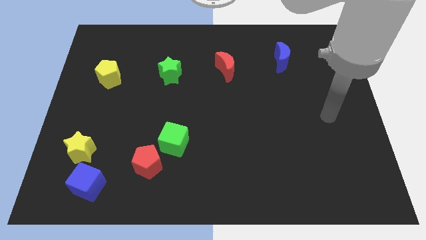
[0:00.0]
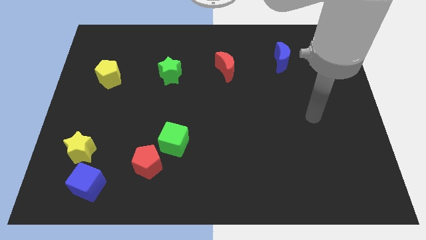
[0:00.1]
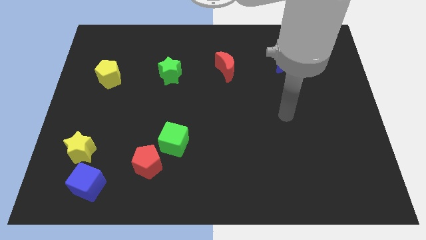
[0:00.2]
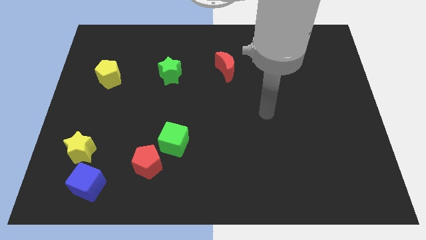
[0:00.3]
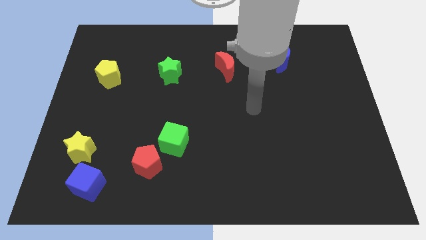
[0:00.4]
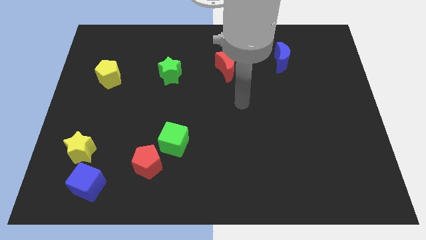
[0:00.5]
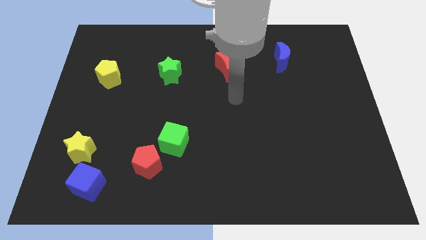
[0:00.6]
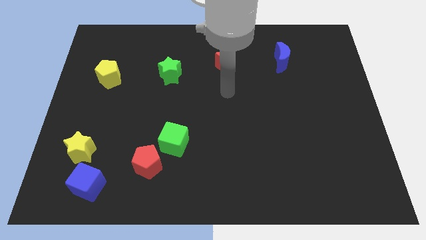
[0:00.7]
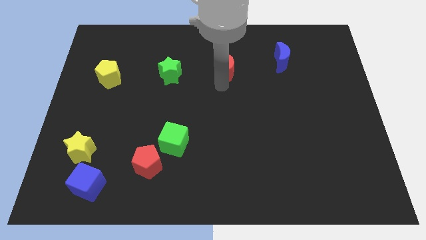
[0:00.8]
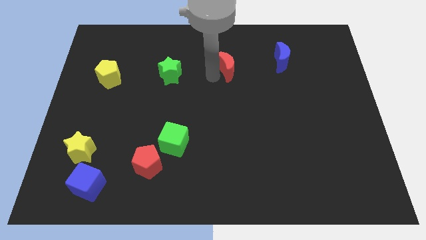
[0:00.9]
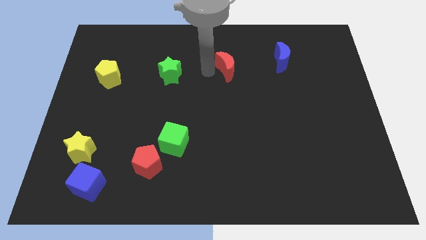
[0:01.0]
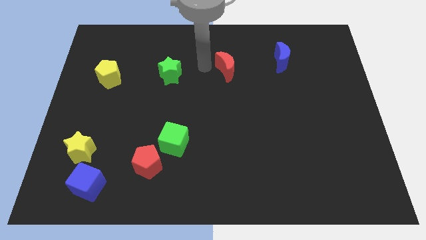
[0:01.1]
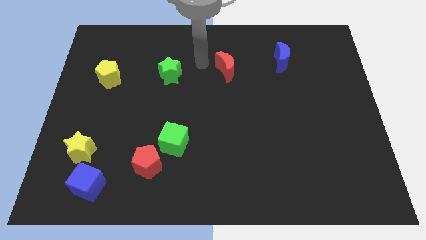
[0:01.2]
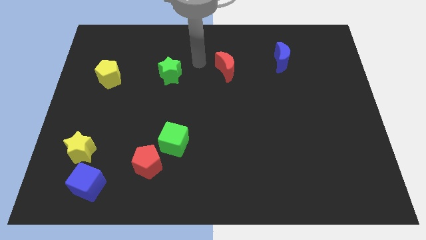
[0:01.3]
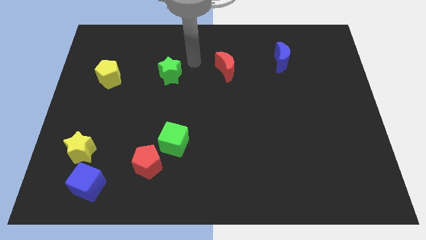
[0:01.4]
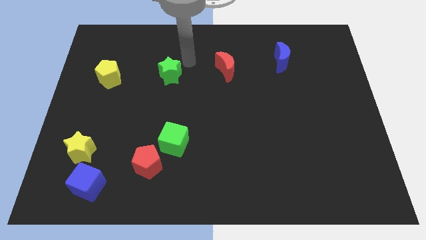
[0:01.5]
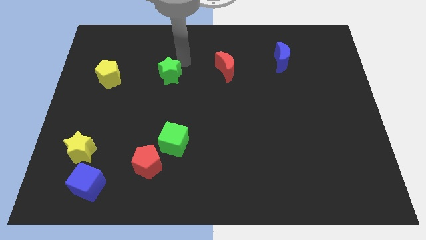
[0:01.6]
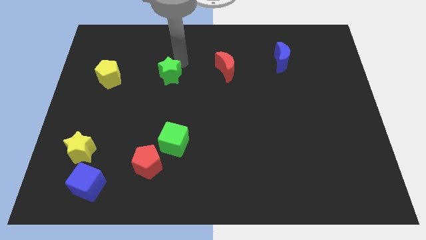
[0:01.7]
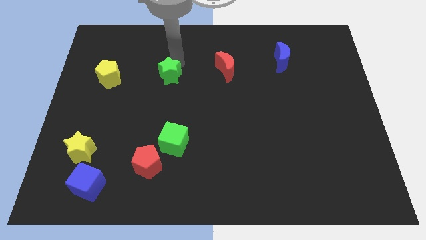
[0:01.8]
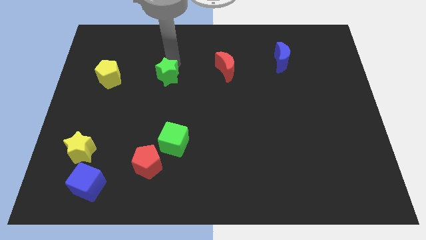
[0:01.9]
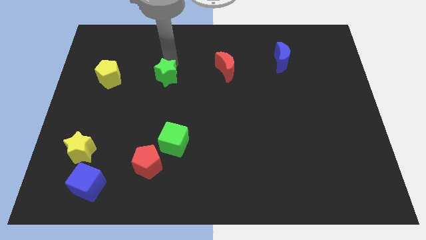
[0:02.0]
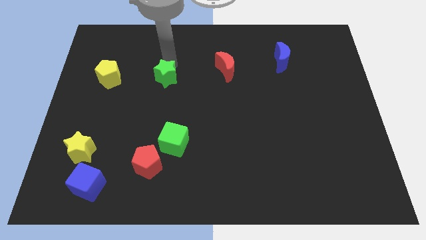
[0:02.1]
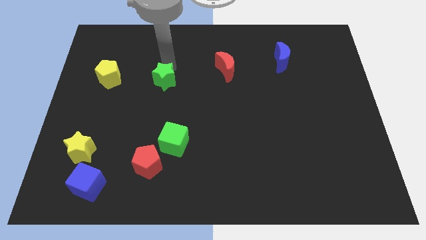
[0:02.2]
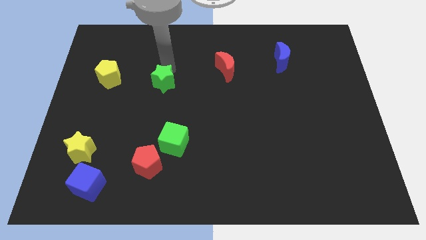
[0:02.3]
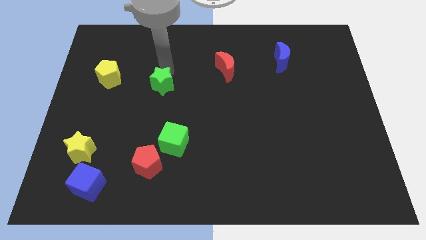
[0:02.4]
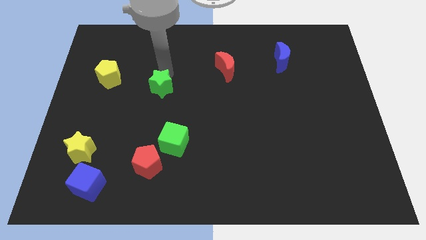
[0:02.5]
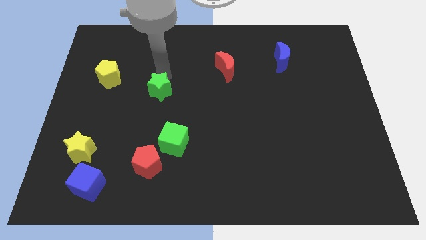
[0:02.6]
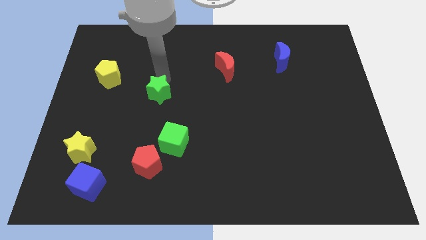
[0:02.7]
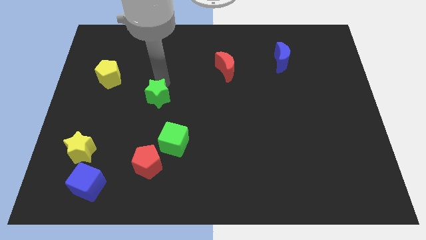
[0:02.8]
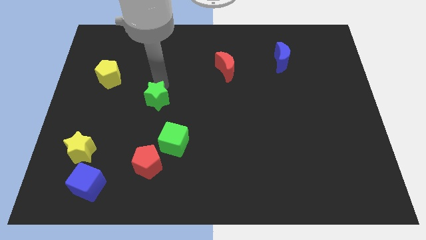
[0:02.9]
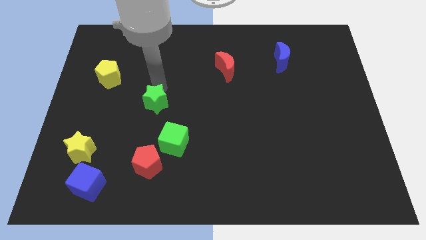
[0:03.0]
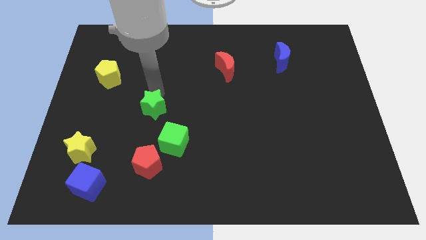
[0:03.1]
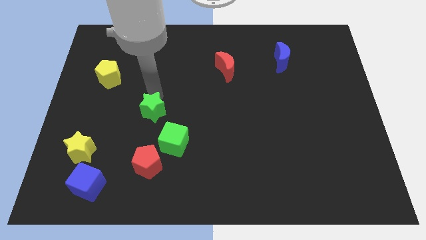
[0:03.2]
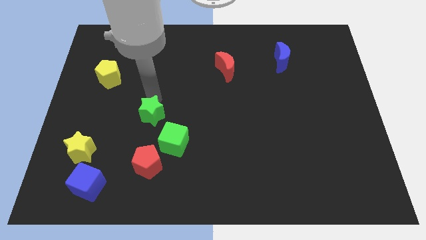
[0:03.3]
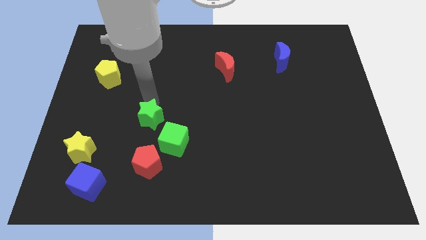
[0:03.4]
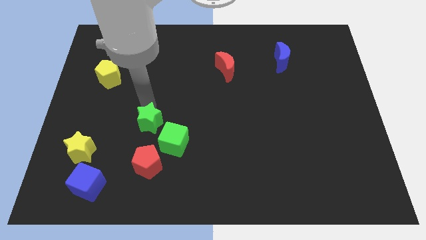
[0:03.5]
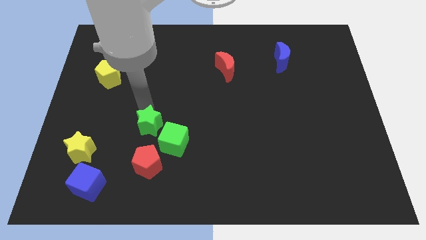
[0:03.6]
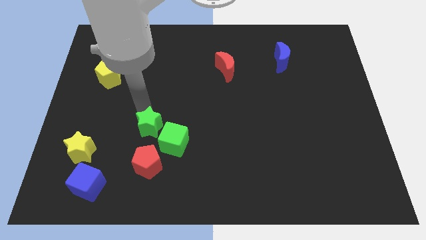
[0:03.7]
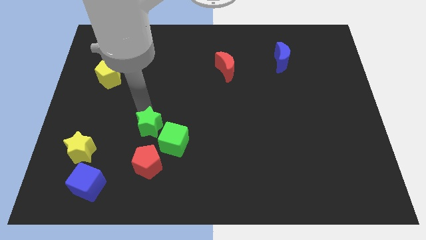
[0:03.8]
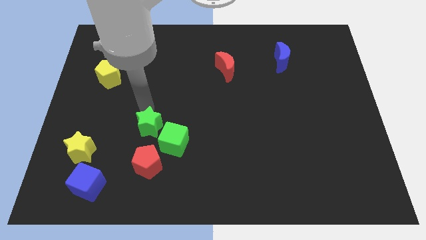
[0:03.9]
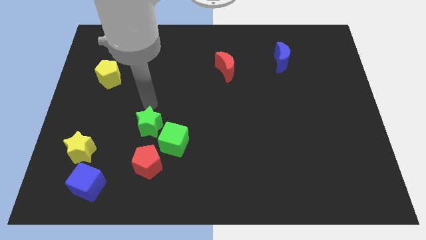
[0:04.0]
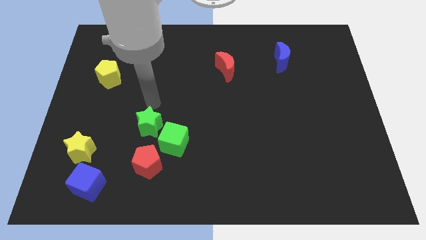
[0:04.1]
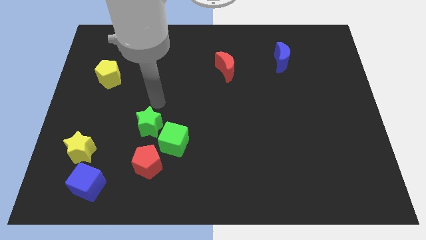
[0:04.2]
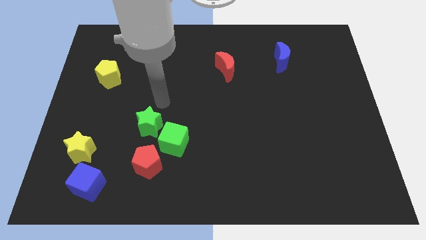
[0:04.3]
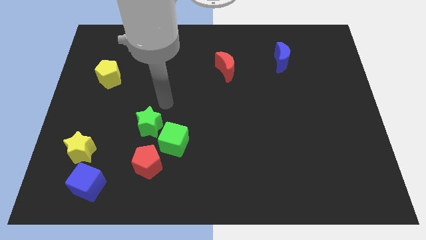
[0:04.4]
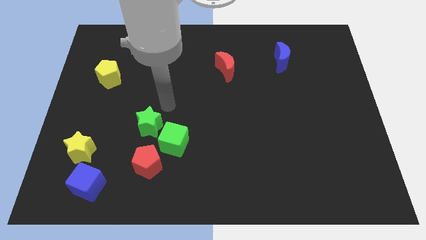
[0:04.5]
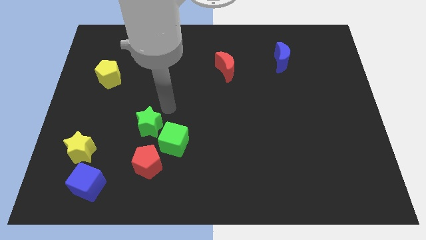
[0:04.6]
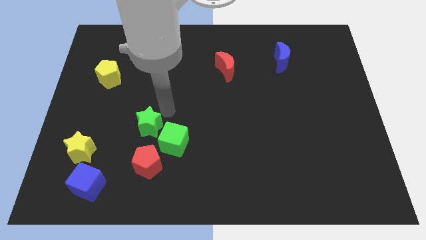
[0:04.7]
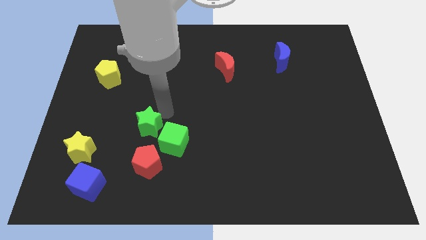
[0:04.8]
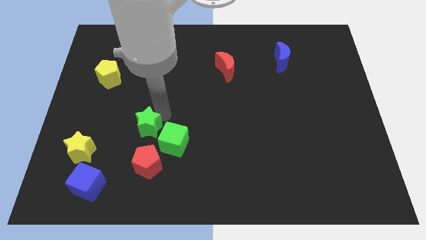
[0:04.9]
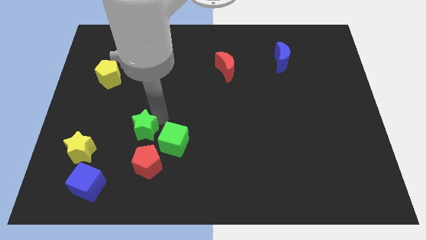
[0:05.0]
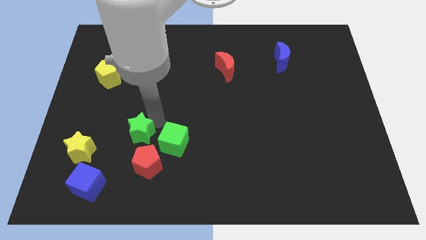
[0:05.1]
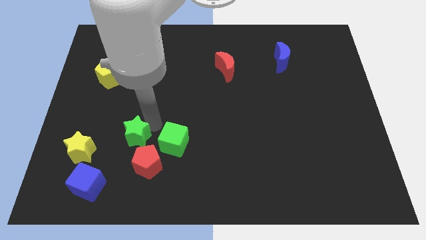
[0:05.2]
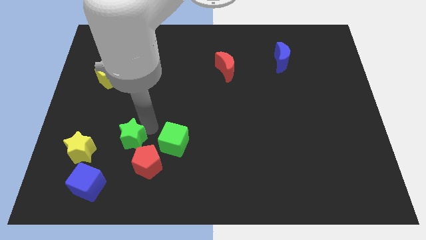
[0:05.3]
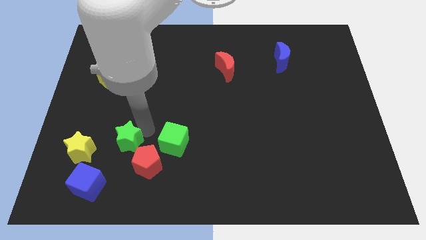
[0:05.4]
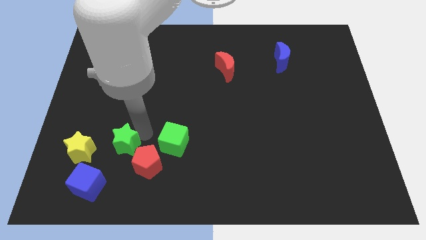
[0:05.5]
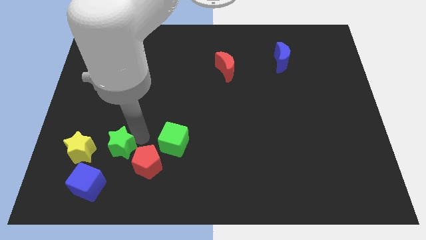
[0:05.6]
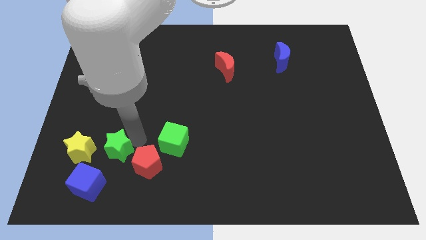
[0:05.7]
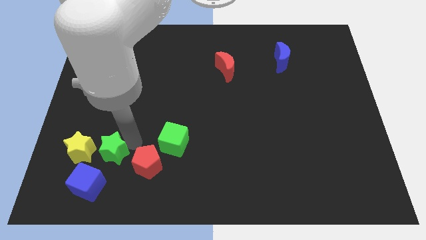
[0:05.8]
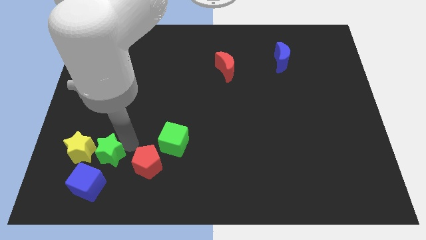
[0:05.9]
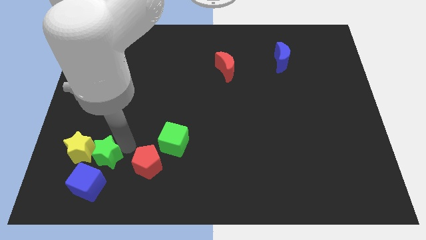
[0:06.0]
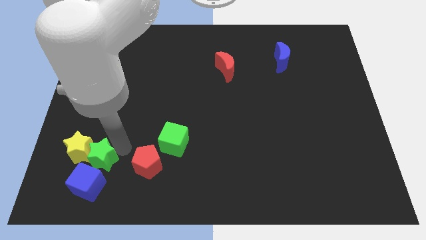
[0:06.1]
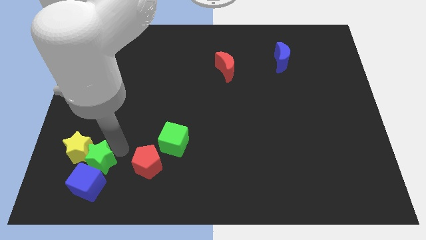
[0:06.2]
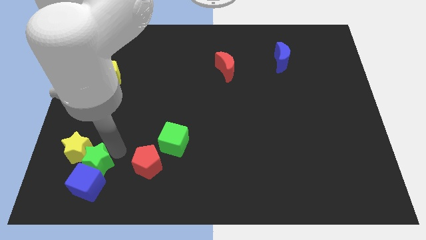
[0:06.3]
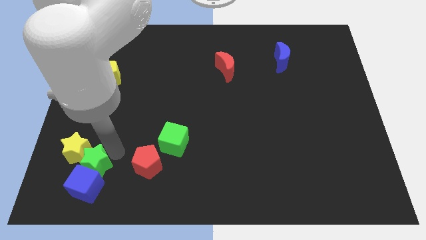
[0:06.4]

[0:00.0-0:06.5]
put the green star towards the blue cube

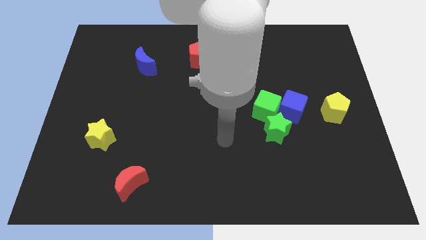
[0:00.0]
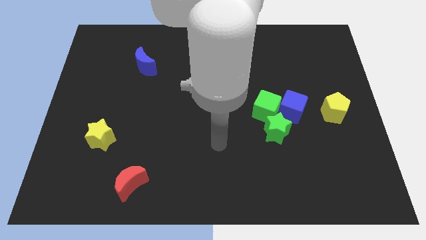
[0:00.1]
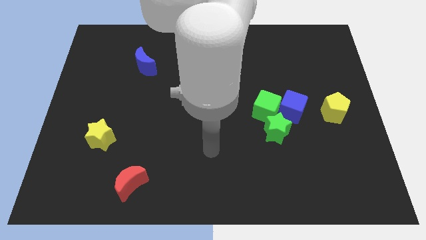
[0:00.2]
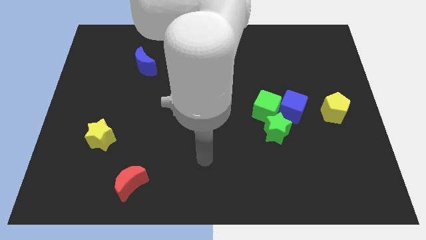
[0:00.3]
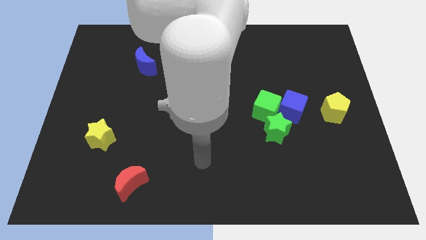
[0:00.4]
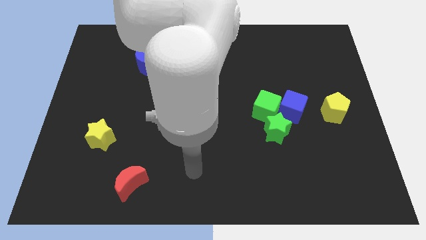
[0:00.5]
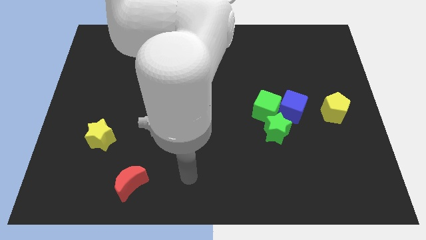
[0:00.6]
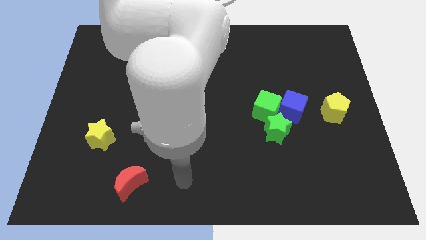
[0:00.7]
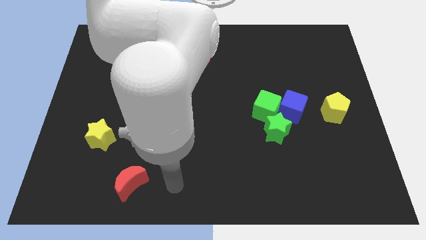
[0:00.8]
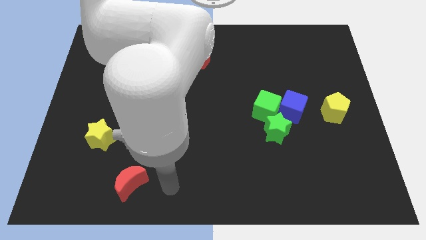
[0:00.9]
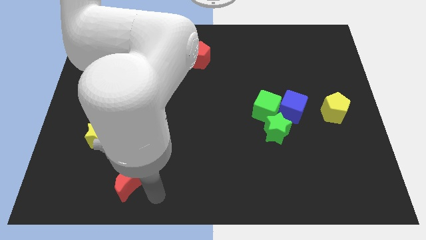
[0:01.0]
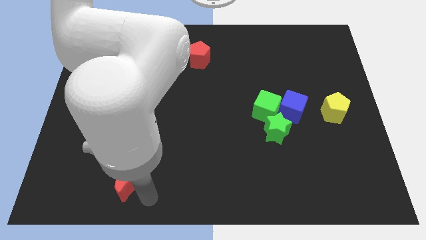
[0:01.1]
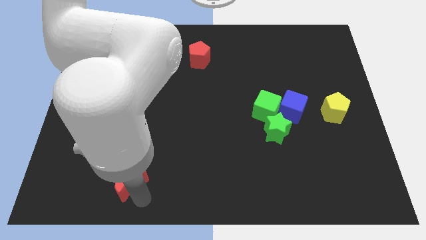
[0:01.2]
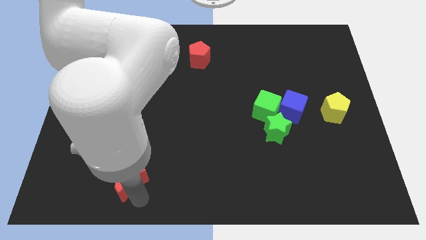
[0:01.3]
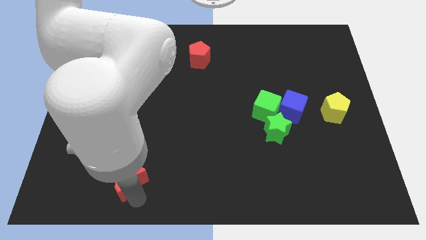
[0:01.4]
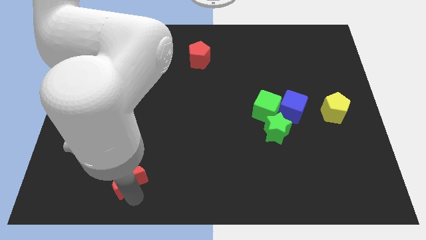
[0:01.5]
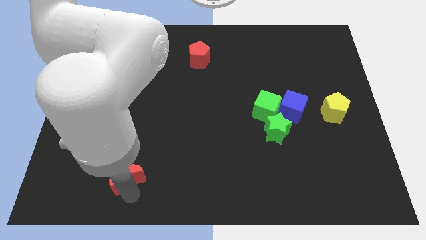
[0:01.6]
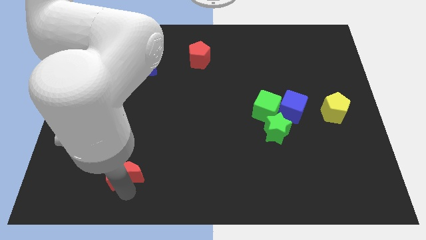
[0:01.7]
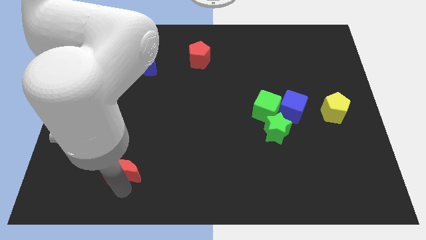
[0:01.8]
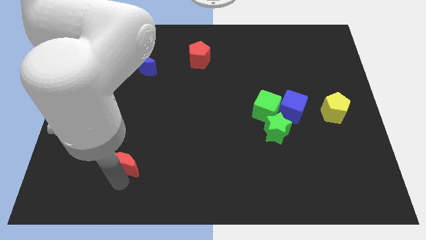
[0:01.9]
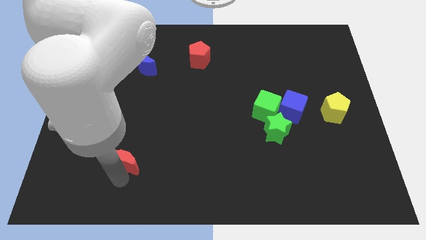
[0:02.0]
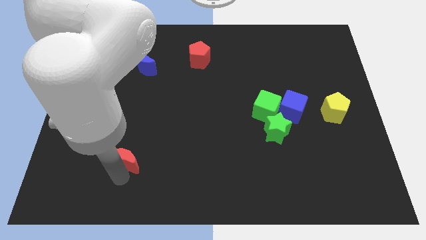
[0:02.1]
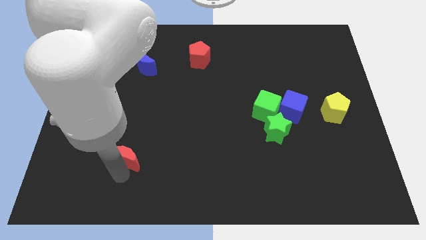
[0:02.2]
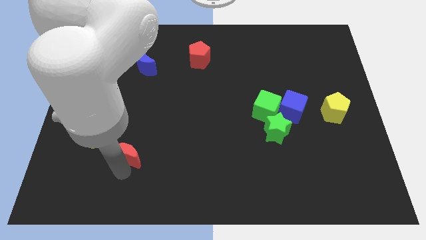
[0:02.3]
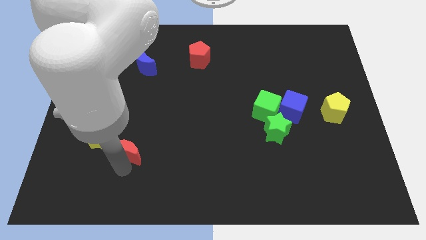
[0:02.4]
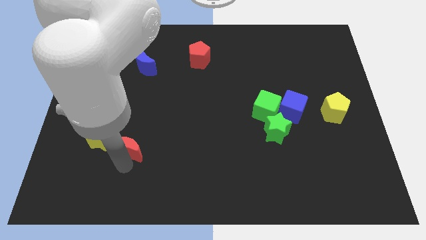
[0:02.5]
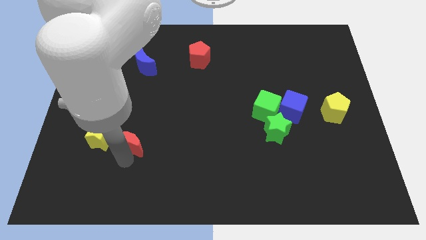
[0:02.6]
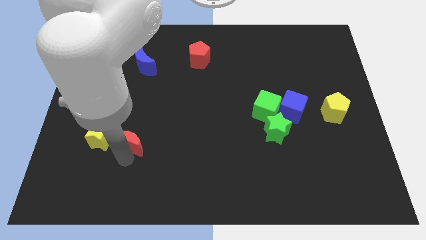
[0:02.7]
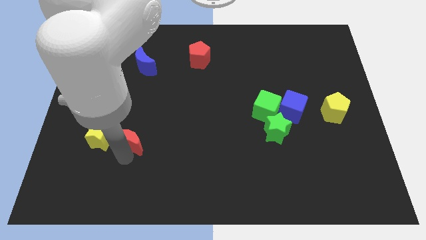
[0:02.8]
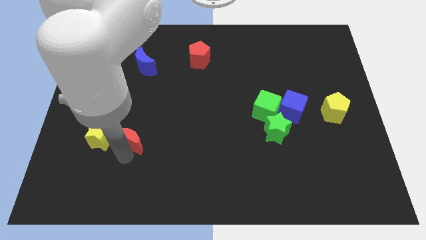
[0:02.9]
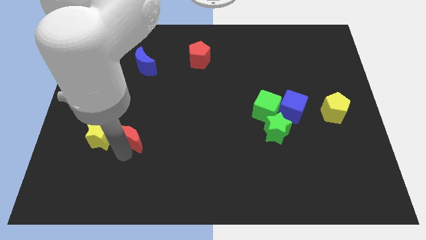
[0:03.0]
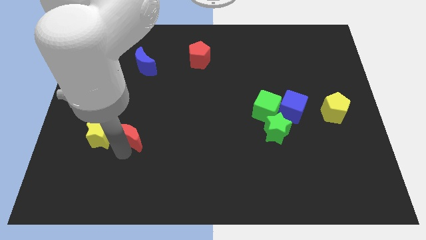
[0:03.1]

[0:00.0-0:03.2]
push the red moon next to the yellow star
